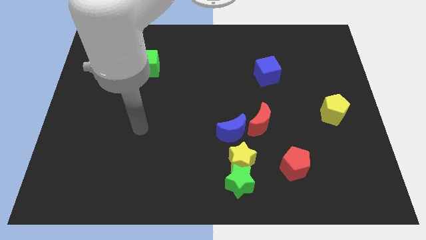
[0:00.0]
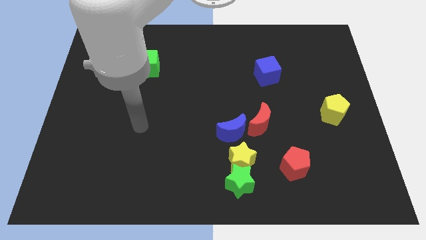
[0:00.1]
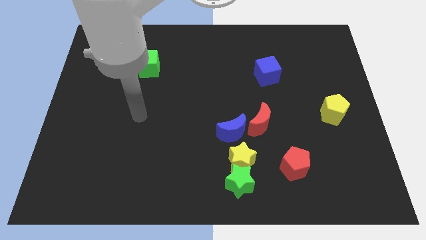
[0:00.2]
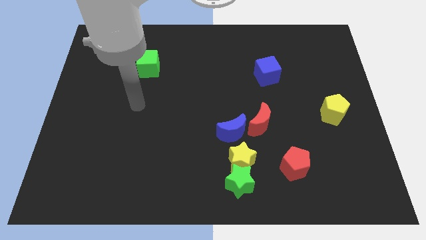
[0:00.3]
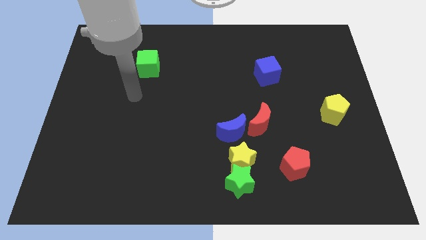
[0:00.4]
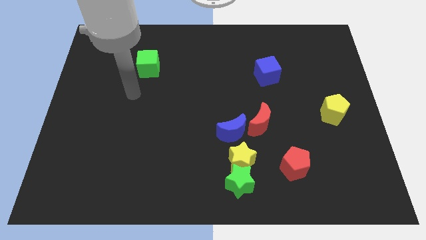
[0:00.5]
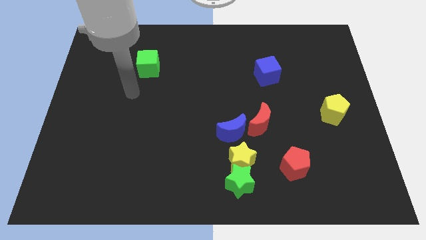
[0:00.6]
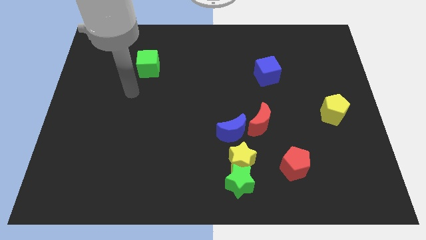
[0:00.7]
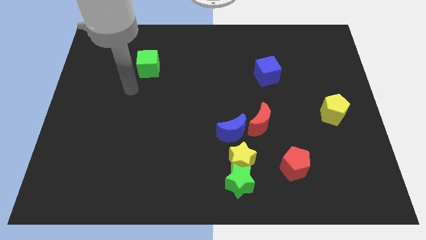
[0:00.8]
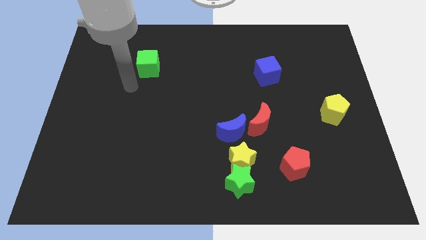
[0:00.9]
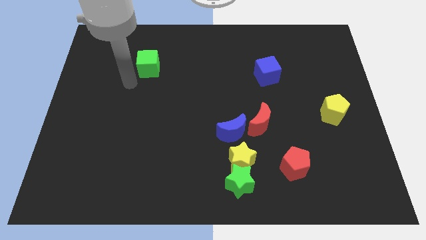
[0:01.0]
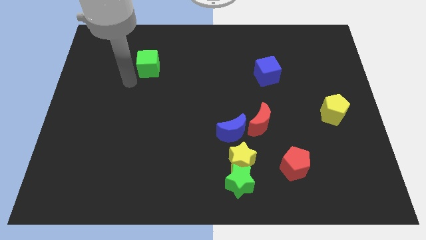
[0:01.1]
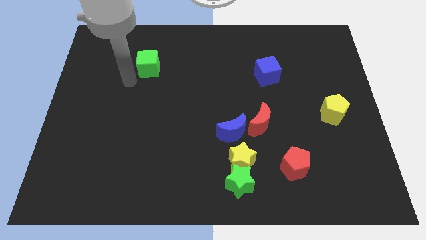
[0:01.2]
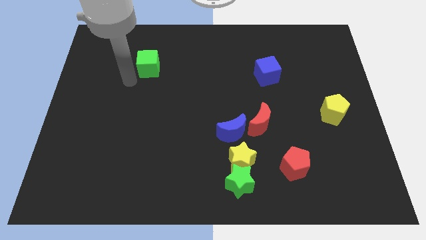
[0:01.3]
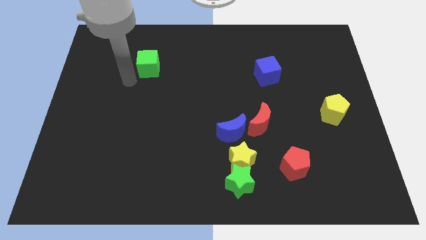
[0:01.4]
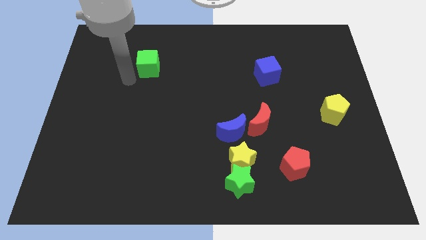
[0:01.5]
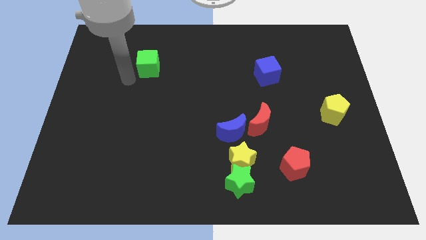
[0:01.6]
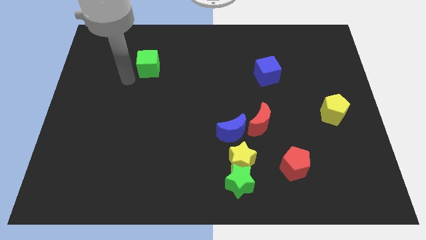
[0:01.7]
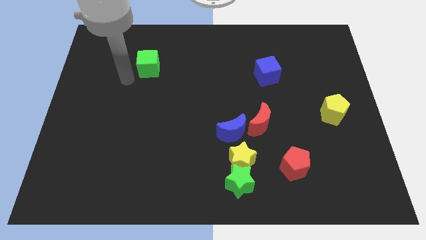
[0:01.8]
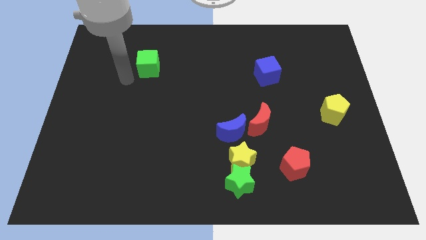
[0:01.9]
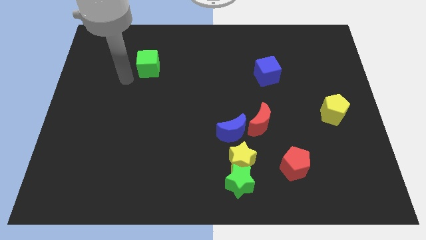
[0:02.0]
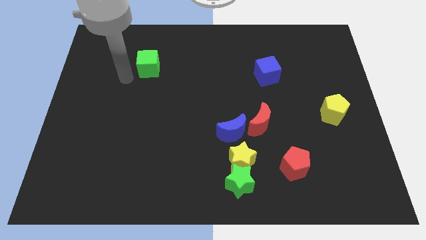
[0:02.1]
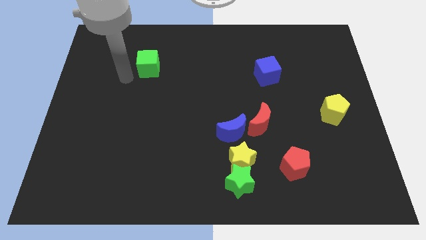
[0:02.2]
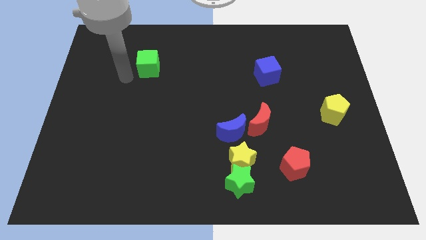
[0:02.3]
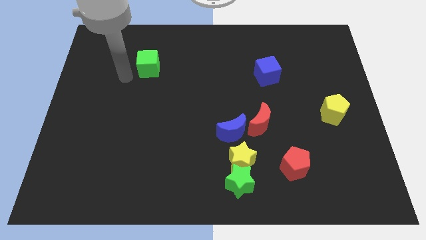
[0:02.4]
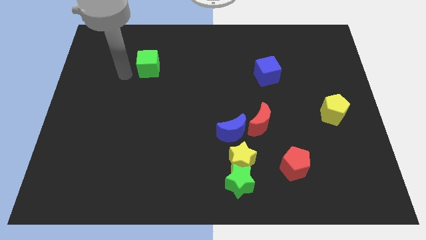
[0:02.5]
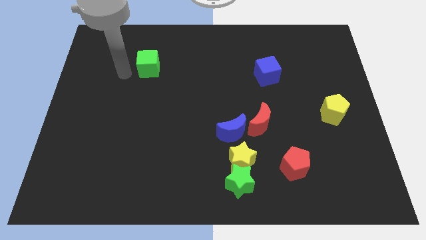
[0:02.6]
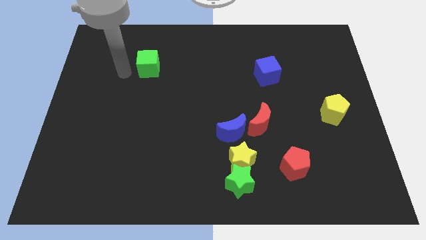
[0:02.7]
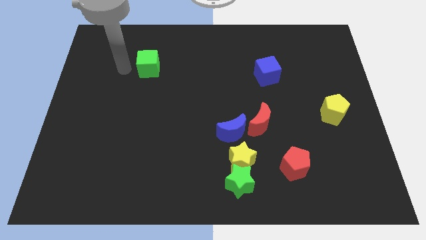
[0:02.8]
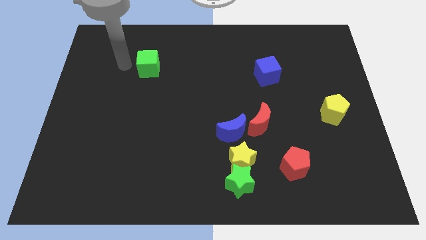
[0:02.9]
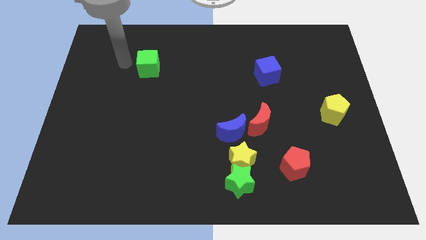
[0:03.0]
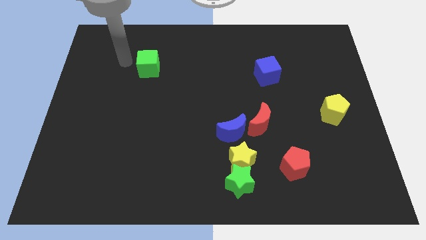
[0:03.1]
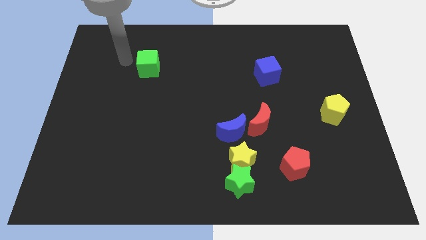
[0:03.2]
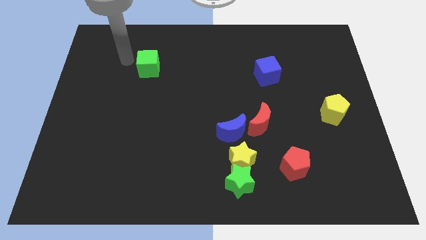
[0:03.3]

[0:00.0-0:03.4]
point your arm left to green cube

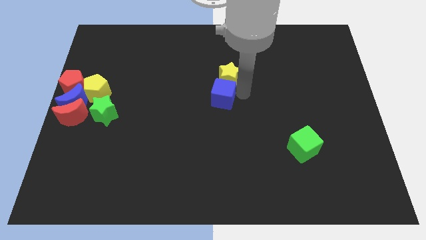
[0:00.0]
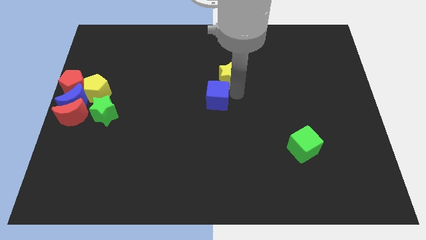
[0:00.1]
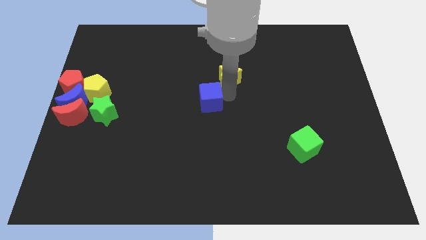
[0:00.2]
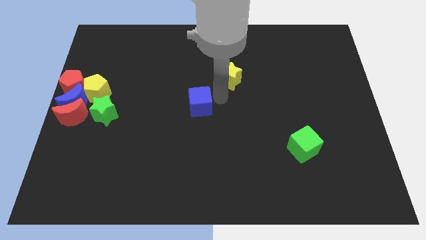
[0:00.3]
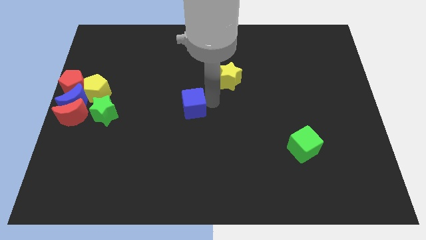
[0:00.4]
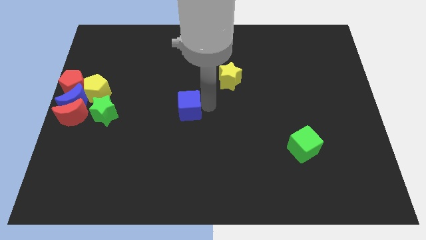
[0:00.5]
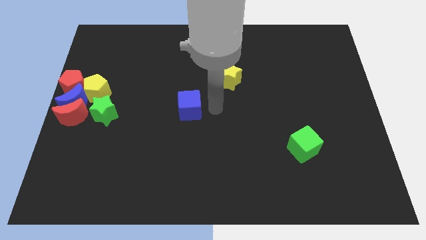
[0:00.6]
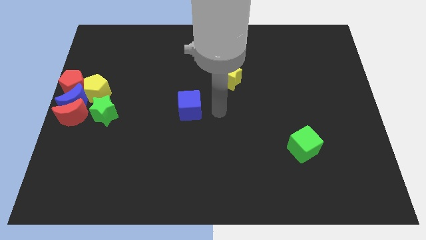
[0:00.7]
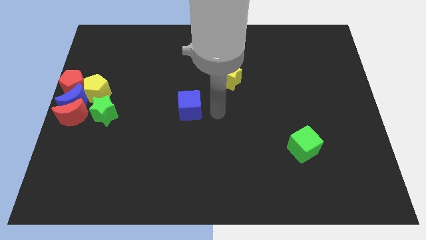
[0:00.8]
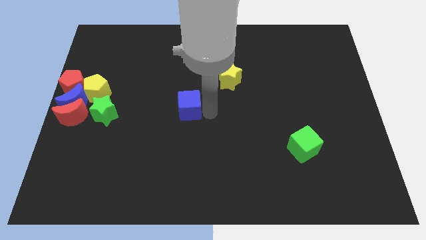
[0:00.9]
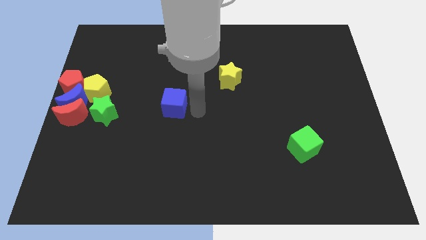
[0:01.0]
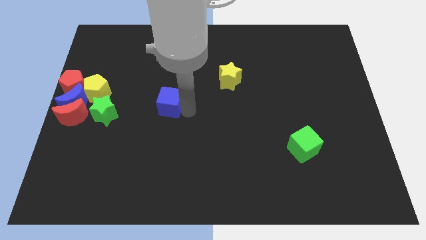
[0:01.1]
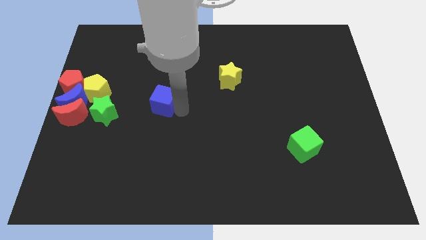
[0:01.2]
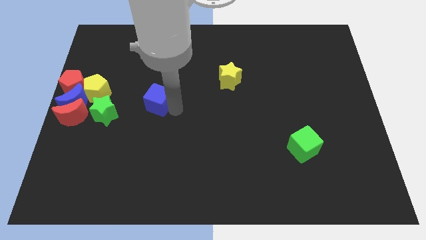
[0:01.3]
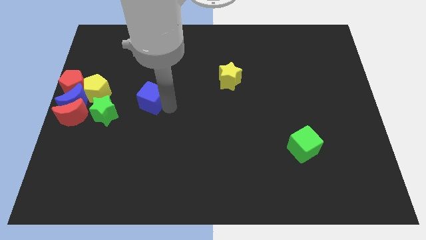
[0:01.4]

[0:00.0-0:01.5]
move the blue cube to the left side of the board

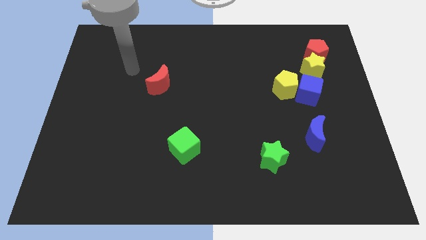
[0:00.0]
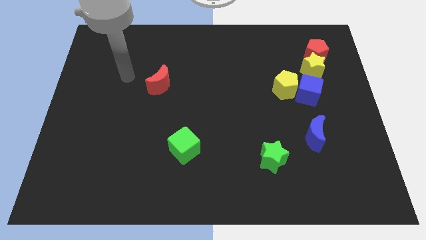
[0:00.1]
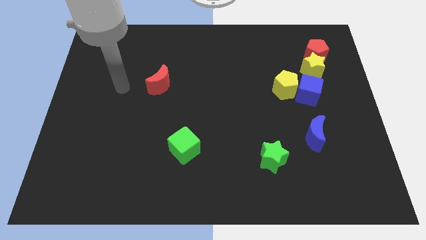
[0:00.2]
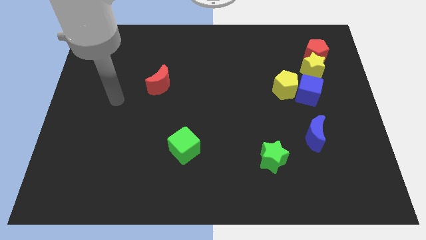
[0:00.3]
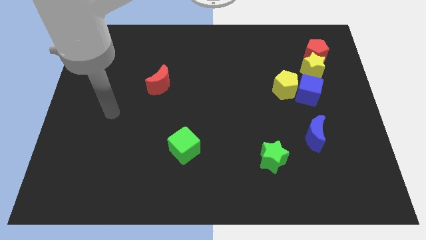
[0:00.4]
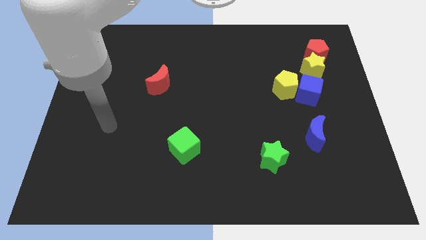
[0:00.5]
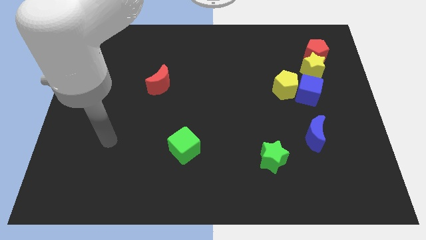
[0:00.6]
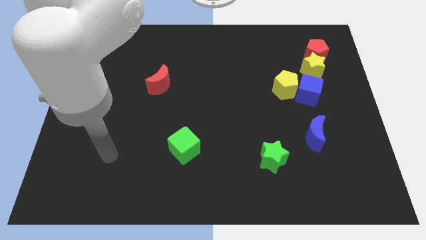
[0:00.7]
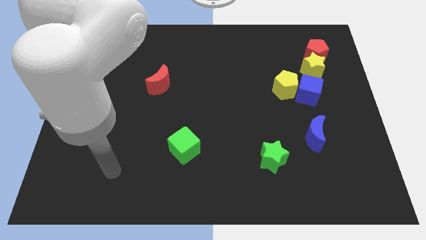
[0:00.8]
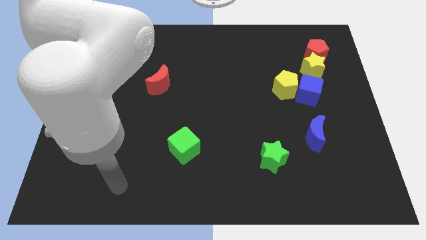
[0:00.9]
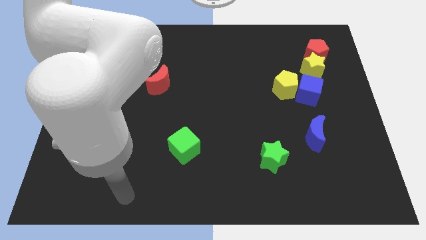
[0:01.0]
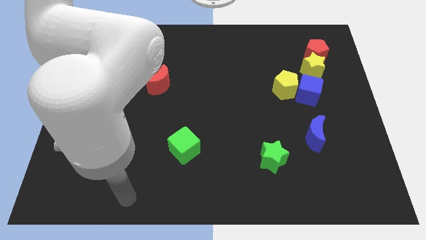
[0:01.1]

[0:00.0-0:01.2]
move the arm to the bottom center of the board

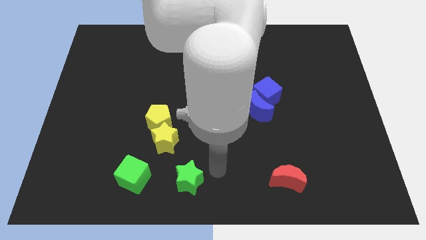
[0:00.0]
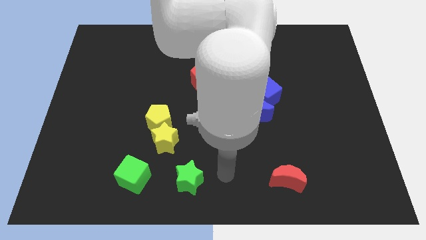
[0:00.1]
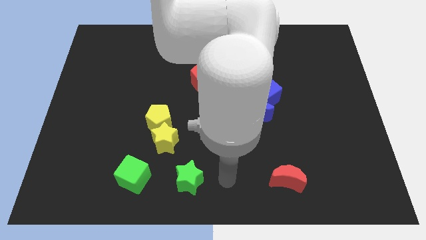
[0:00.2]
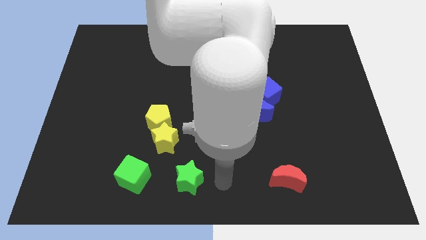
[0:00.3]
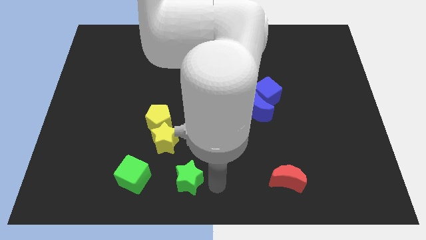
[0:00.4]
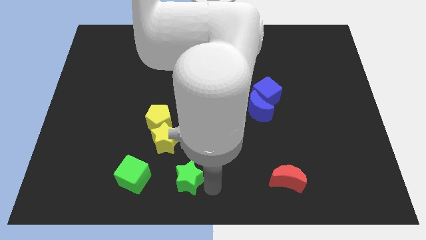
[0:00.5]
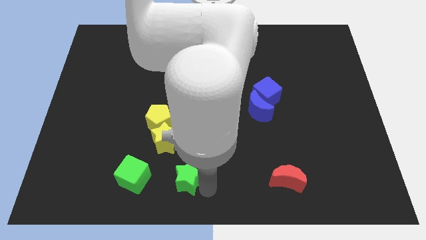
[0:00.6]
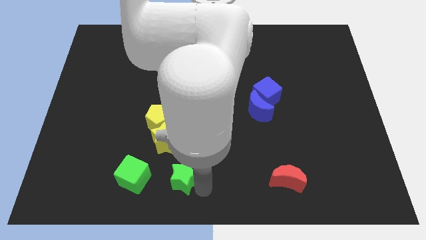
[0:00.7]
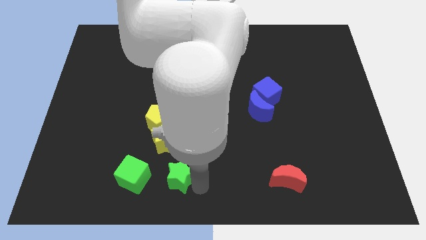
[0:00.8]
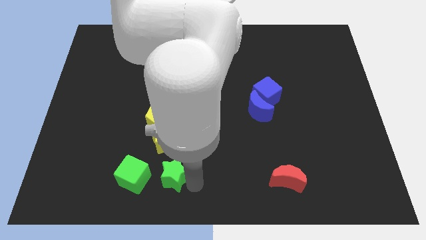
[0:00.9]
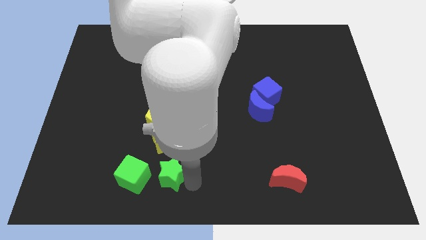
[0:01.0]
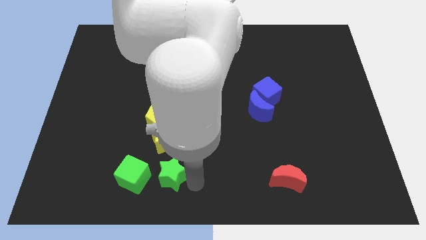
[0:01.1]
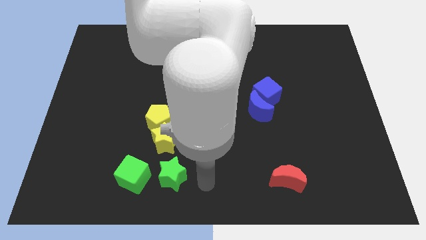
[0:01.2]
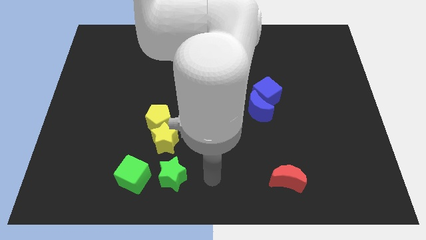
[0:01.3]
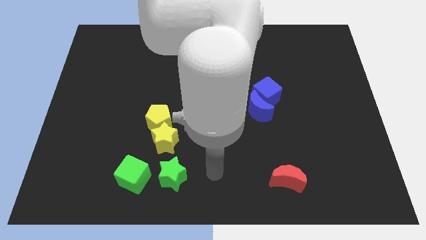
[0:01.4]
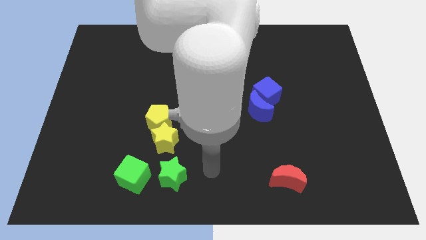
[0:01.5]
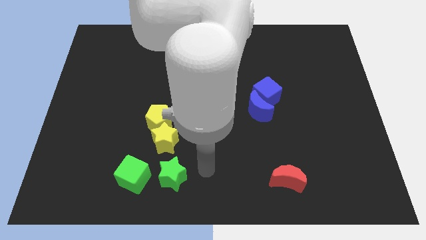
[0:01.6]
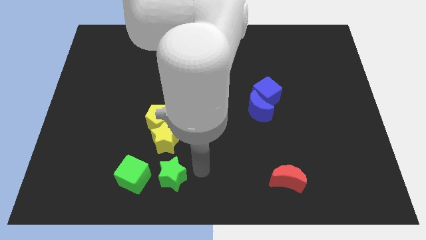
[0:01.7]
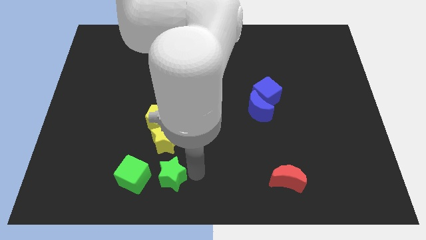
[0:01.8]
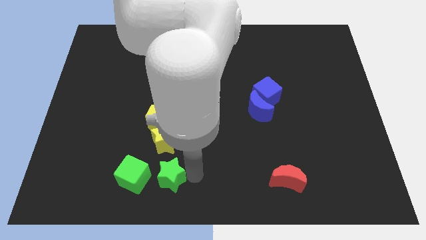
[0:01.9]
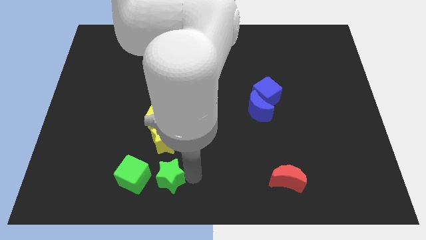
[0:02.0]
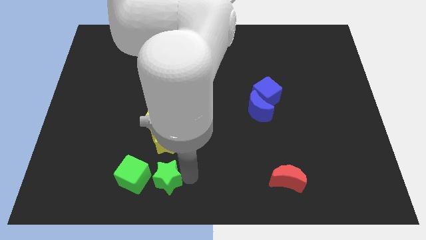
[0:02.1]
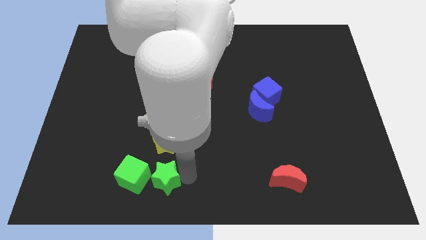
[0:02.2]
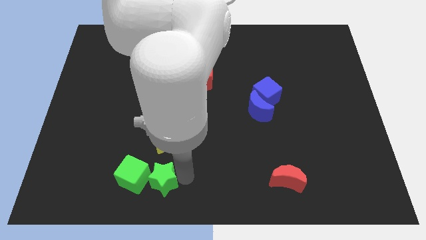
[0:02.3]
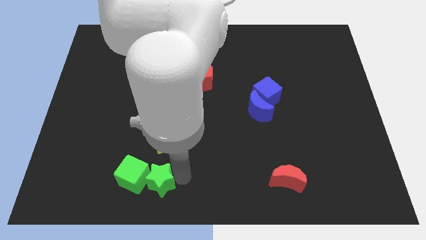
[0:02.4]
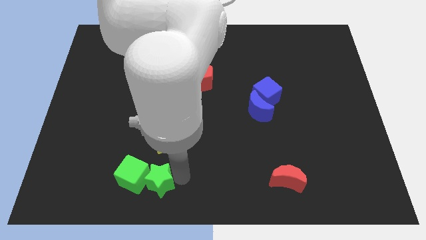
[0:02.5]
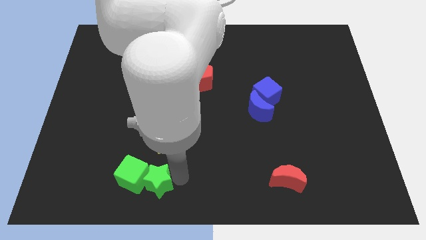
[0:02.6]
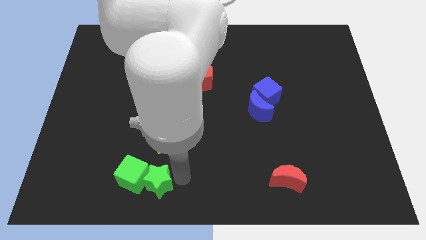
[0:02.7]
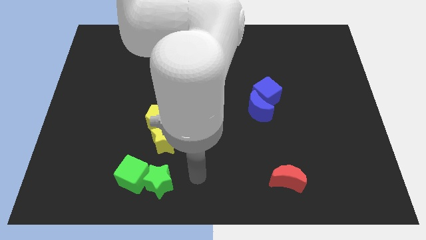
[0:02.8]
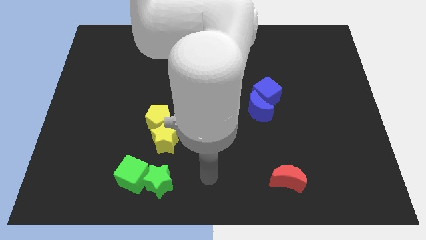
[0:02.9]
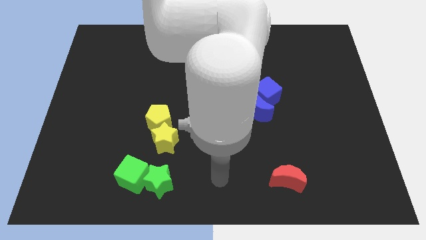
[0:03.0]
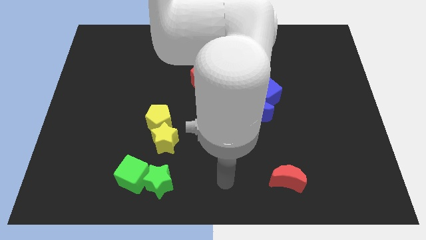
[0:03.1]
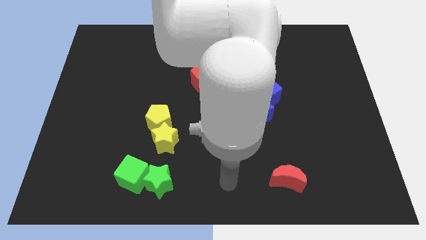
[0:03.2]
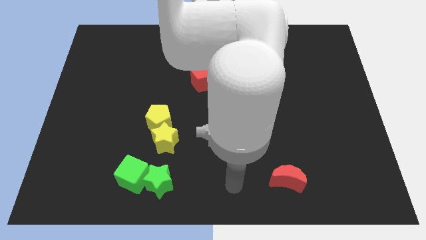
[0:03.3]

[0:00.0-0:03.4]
place the green star into the green cube
